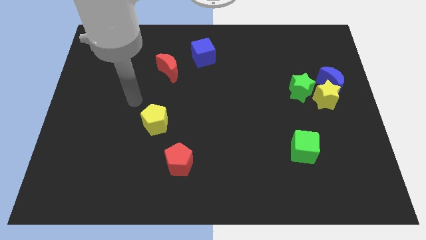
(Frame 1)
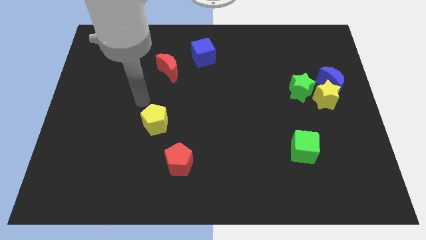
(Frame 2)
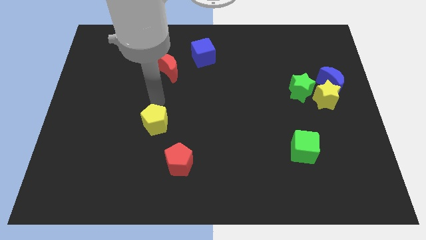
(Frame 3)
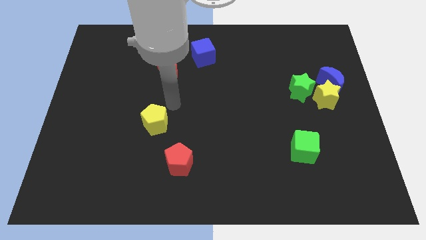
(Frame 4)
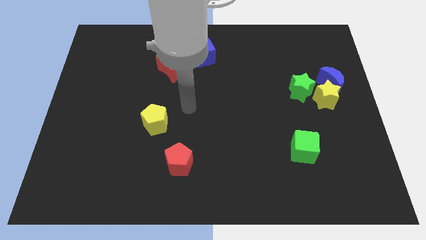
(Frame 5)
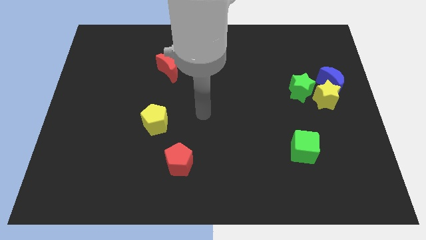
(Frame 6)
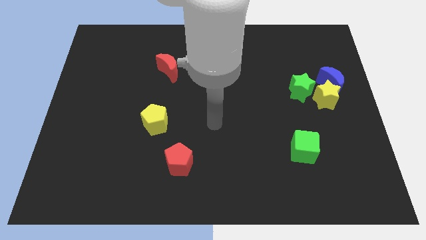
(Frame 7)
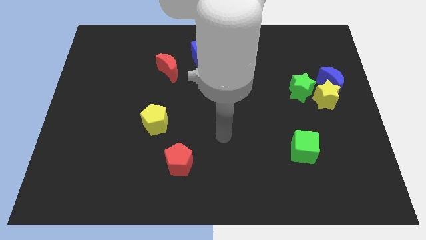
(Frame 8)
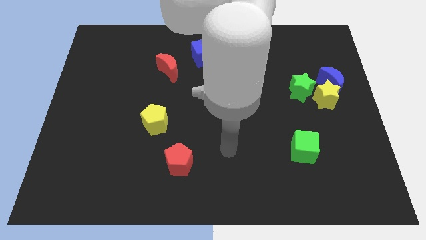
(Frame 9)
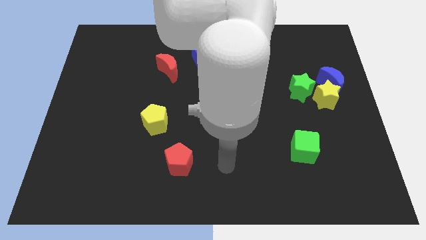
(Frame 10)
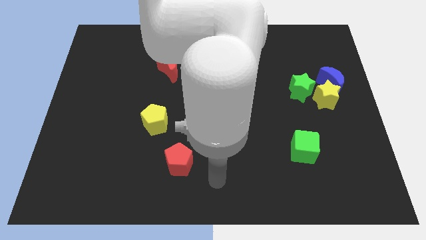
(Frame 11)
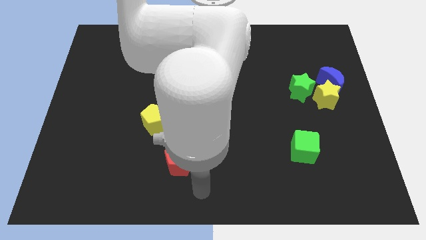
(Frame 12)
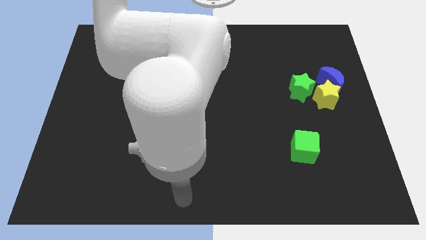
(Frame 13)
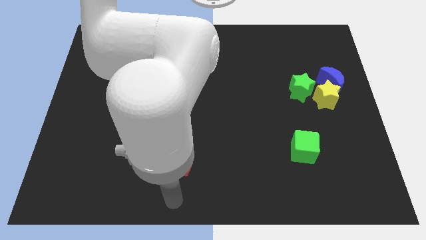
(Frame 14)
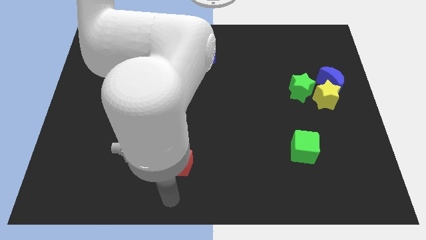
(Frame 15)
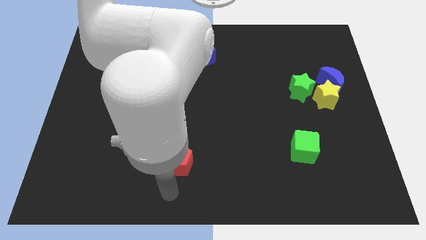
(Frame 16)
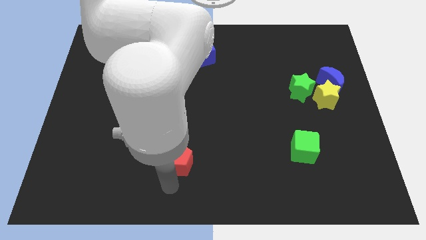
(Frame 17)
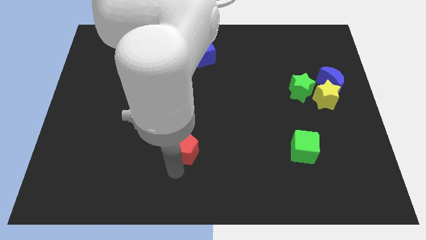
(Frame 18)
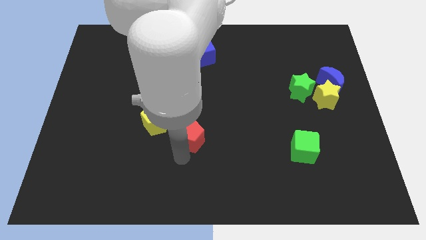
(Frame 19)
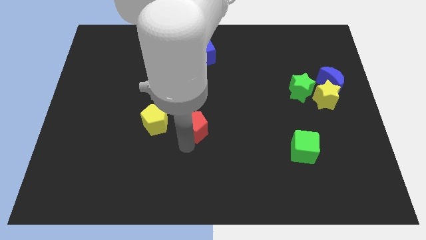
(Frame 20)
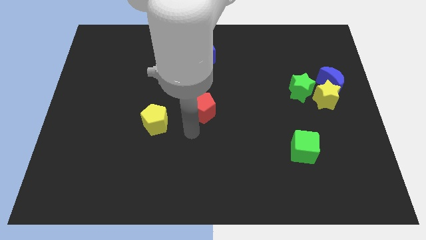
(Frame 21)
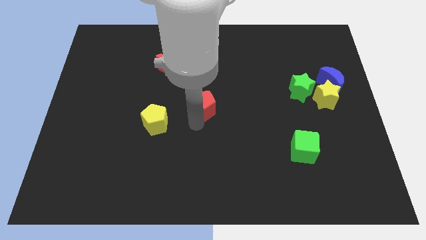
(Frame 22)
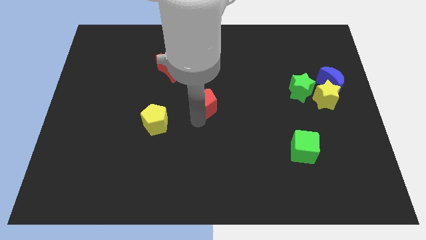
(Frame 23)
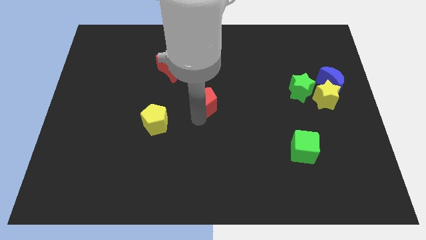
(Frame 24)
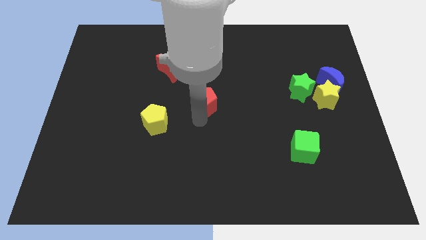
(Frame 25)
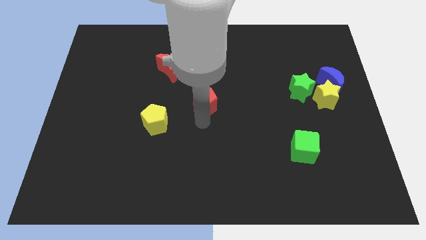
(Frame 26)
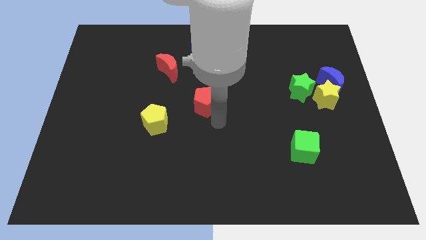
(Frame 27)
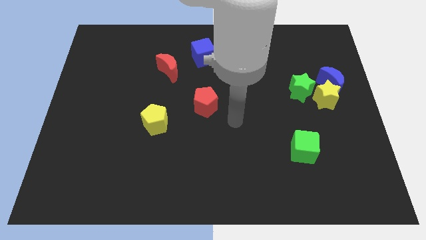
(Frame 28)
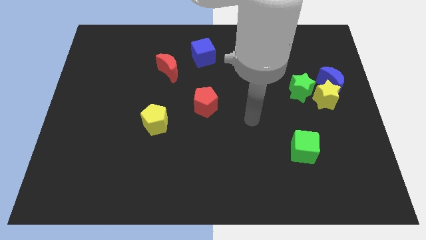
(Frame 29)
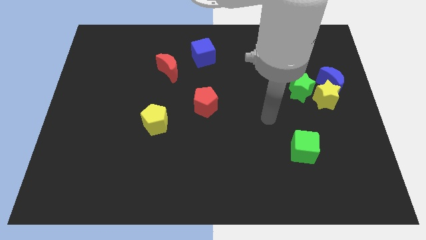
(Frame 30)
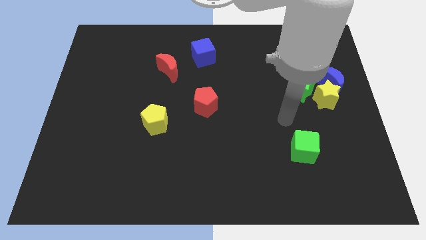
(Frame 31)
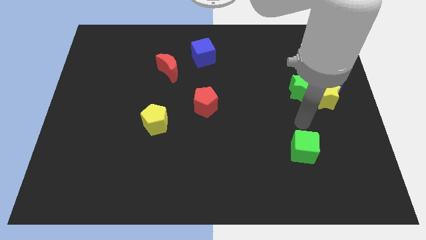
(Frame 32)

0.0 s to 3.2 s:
push the red pentagon to the center of the board

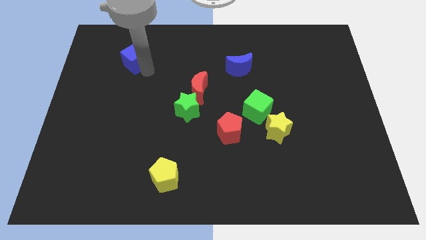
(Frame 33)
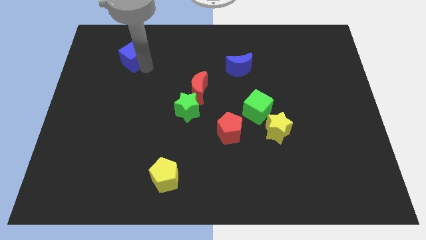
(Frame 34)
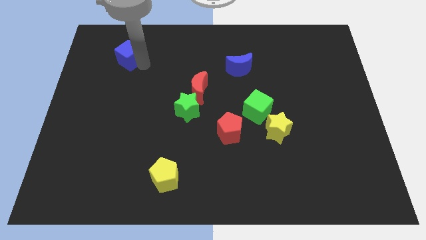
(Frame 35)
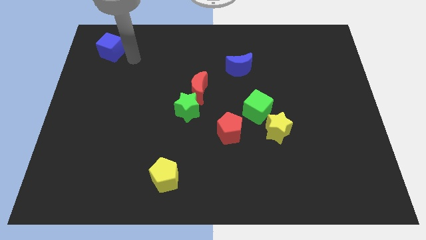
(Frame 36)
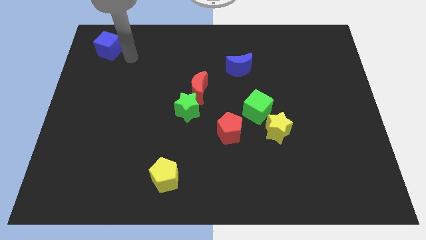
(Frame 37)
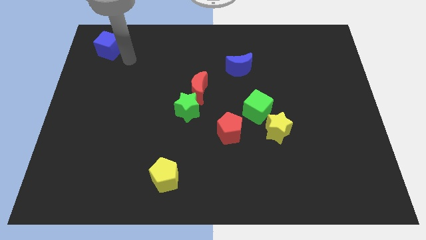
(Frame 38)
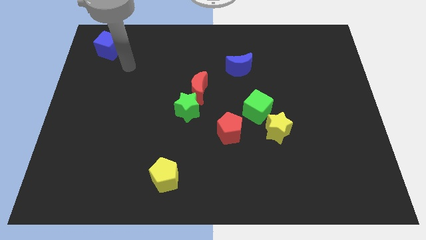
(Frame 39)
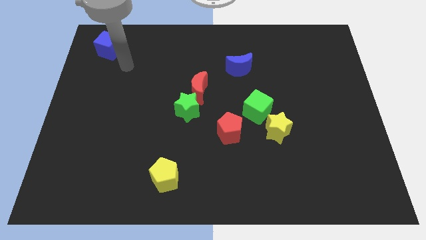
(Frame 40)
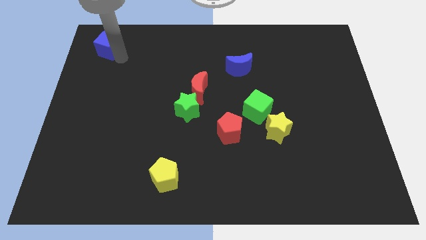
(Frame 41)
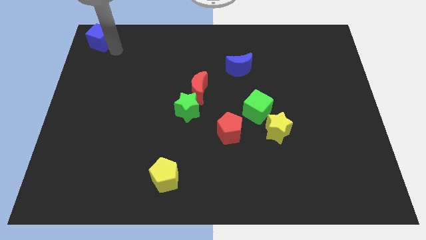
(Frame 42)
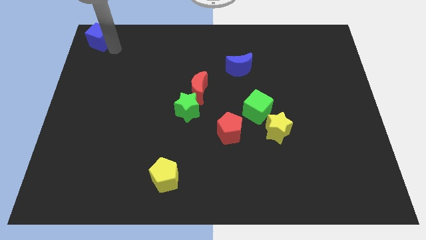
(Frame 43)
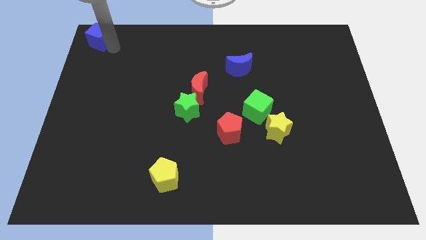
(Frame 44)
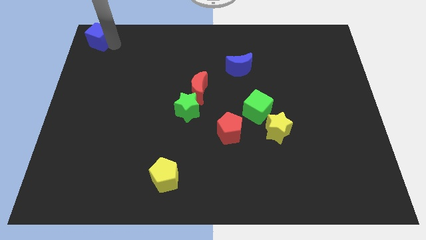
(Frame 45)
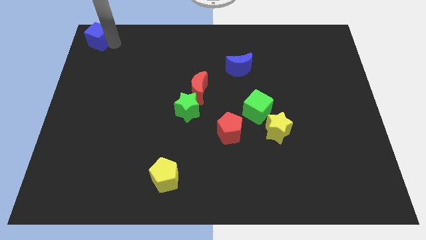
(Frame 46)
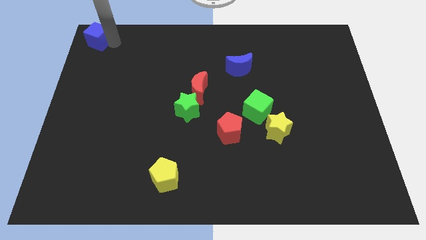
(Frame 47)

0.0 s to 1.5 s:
push the blue cube to the top left corner of the board

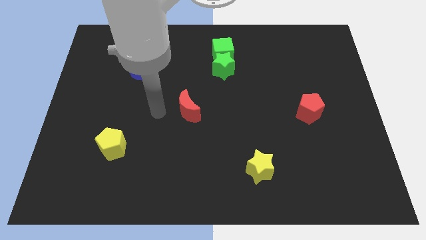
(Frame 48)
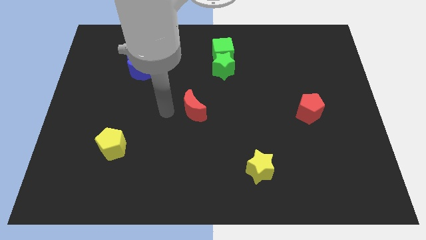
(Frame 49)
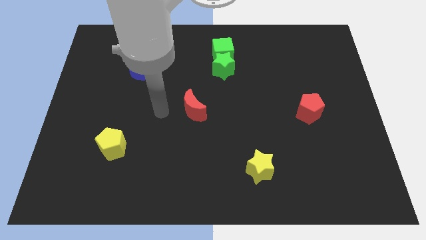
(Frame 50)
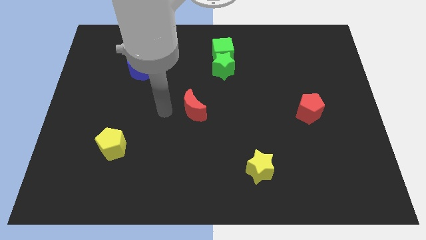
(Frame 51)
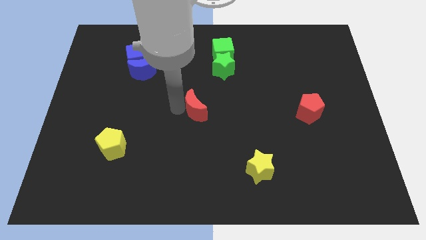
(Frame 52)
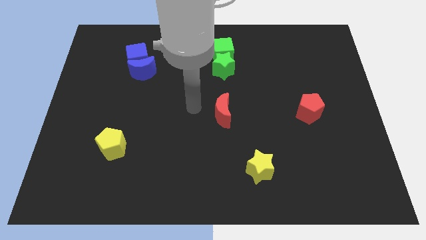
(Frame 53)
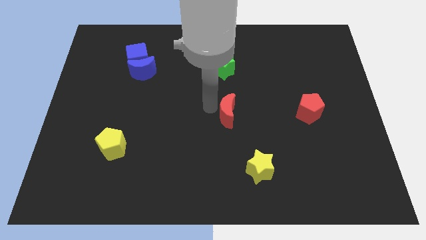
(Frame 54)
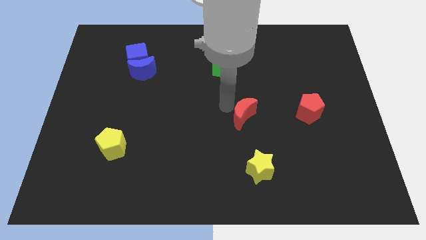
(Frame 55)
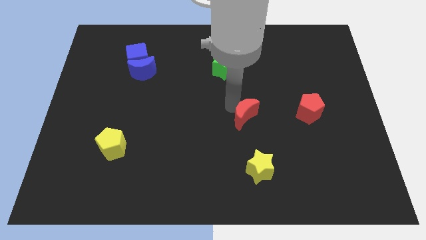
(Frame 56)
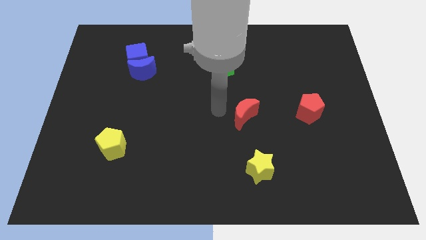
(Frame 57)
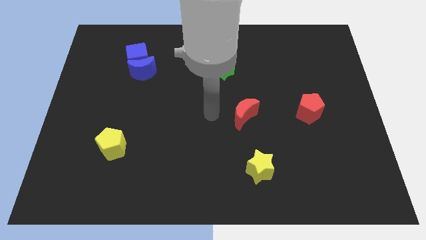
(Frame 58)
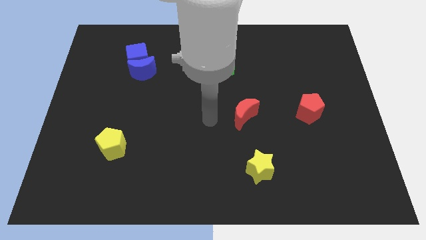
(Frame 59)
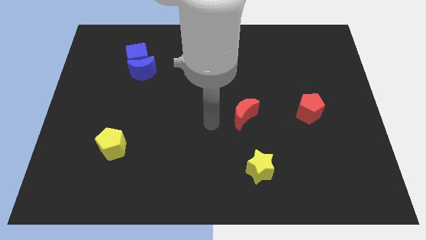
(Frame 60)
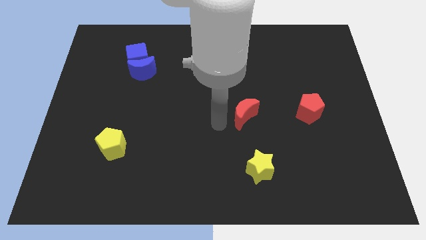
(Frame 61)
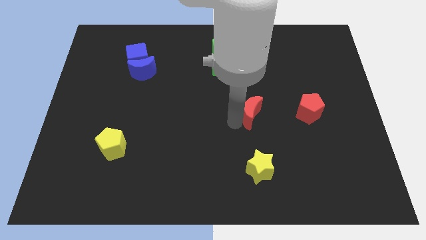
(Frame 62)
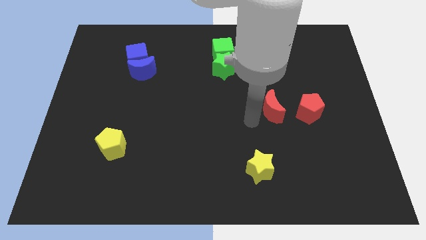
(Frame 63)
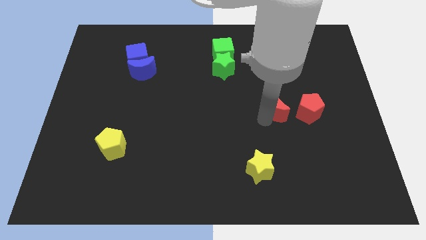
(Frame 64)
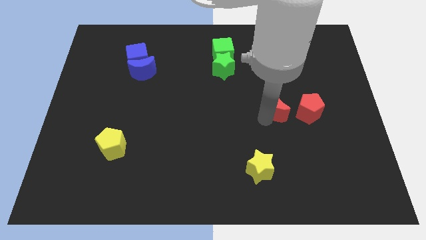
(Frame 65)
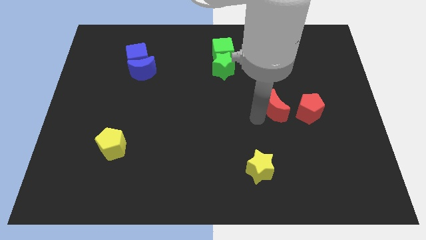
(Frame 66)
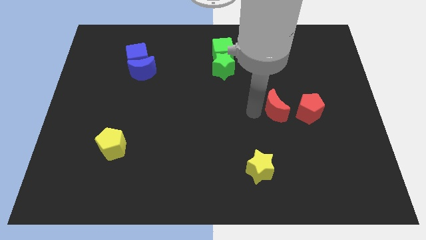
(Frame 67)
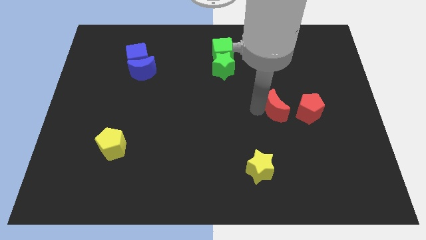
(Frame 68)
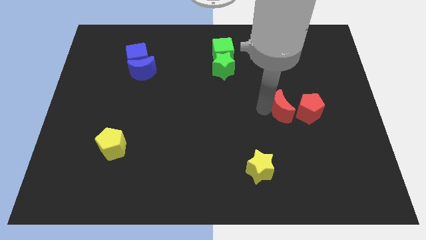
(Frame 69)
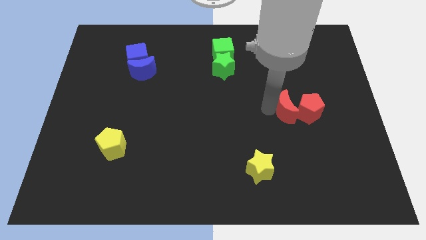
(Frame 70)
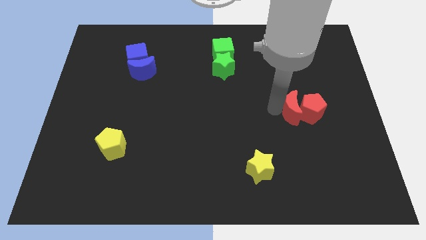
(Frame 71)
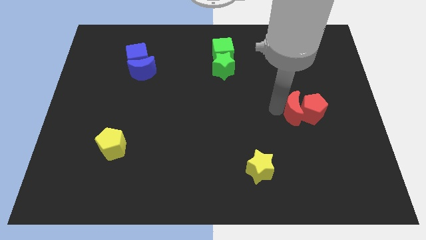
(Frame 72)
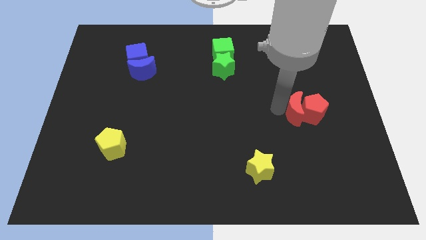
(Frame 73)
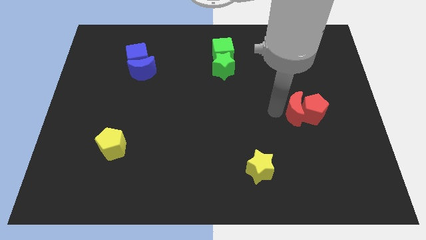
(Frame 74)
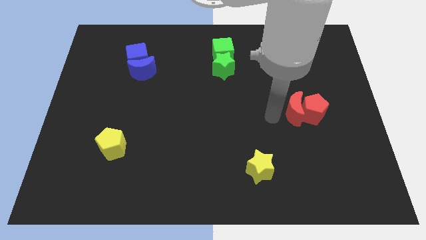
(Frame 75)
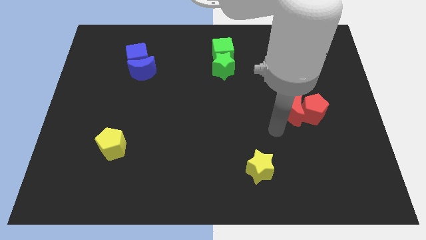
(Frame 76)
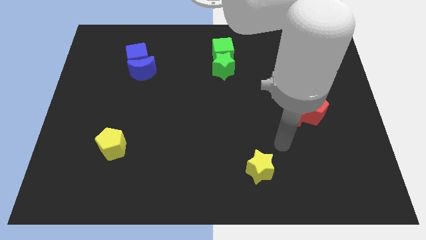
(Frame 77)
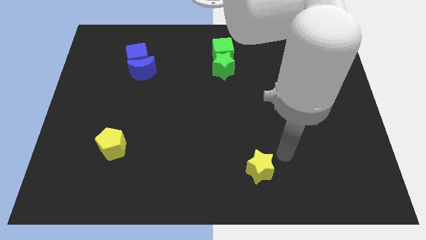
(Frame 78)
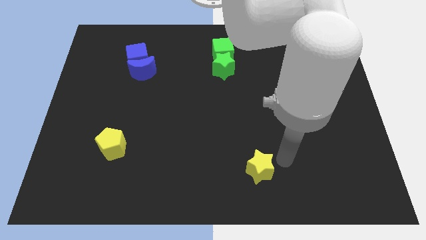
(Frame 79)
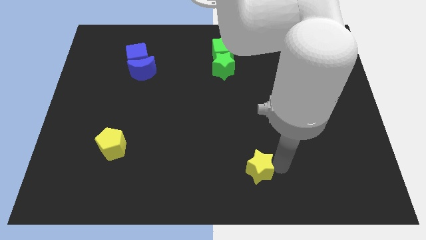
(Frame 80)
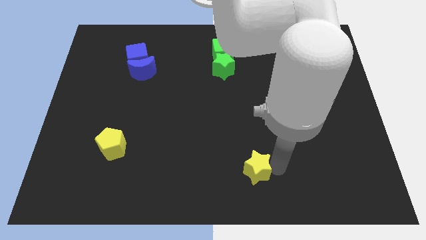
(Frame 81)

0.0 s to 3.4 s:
move the red moon into the red pentagon

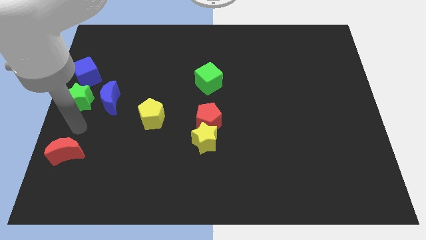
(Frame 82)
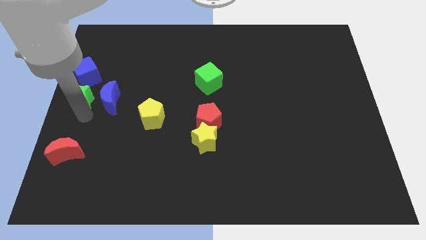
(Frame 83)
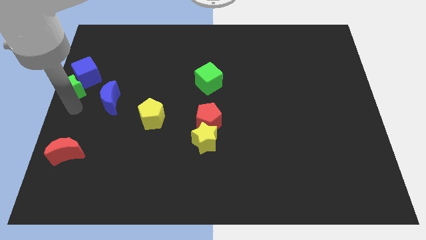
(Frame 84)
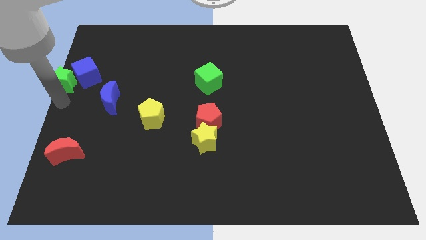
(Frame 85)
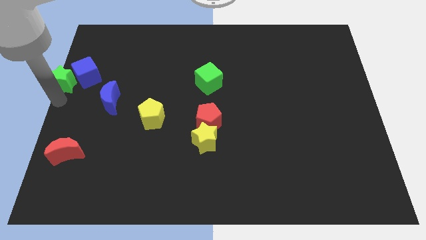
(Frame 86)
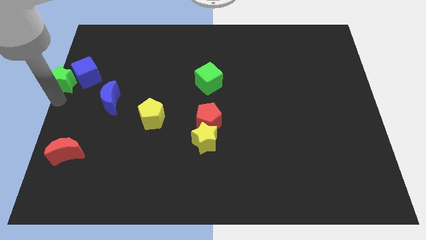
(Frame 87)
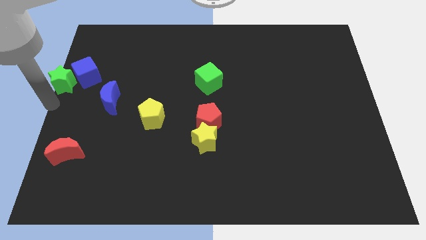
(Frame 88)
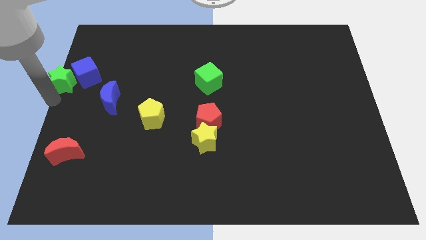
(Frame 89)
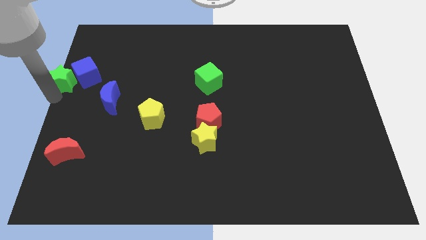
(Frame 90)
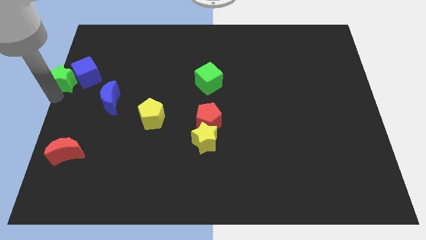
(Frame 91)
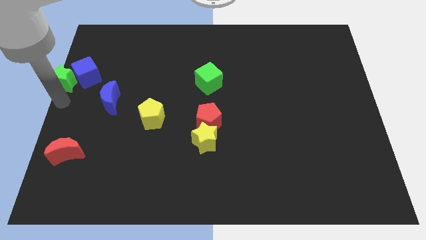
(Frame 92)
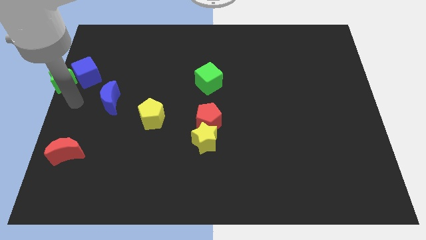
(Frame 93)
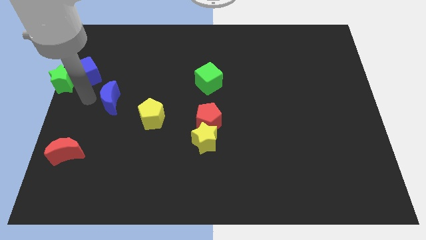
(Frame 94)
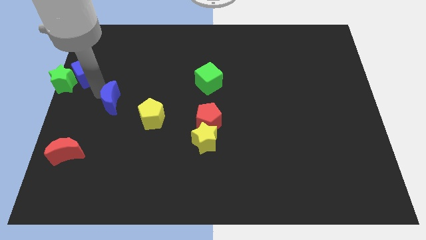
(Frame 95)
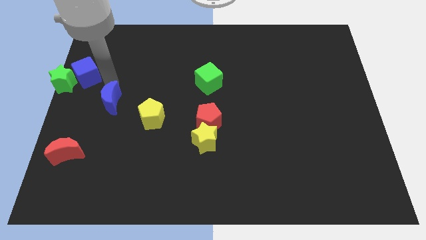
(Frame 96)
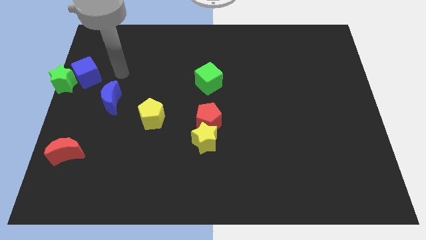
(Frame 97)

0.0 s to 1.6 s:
move the green star close to the blue cube towards left
